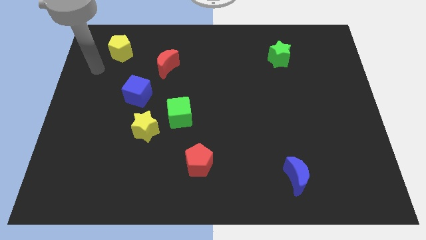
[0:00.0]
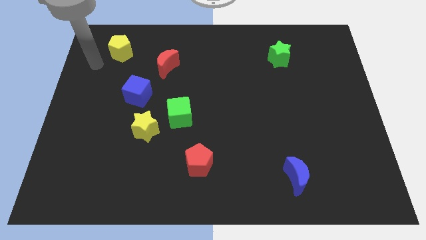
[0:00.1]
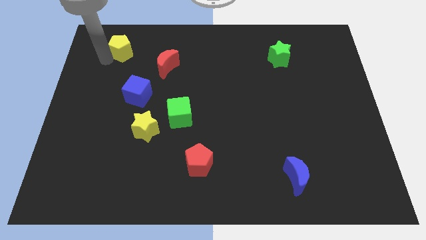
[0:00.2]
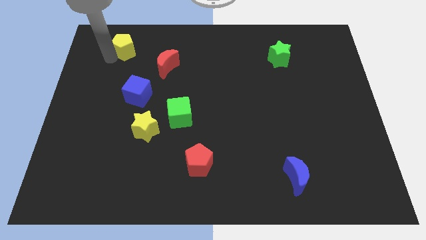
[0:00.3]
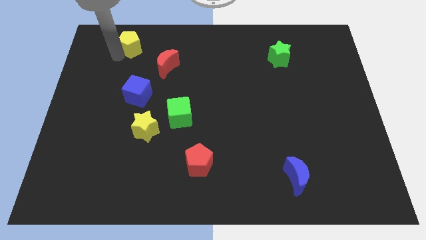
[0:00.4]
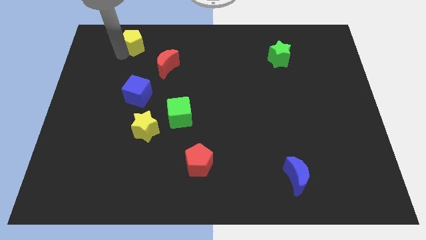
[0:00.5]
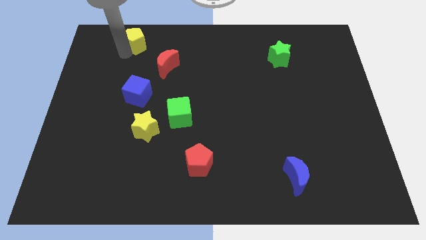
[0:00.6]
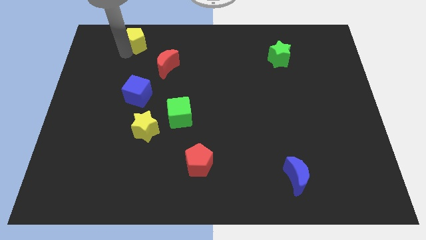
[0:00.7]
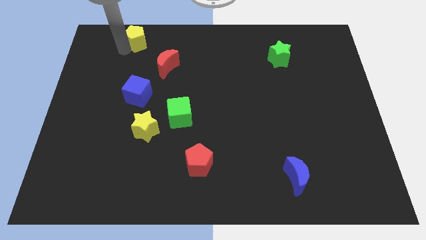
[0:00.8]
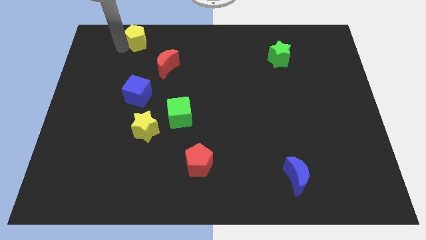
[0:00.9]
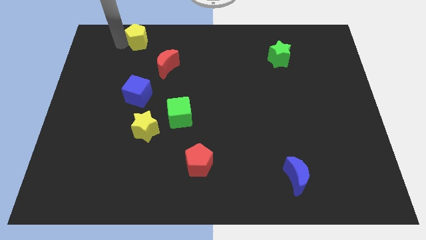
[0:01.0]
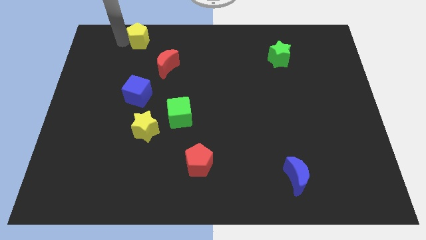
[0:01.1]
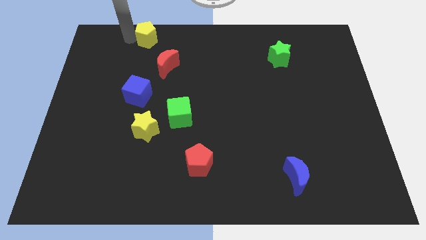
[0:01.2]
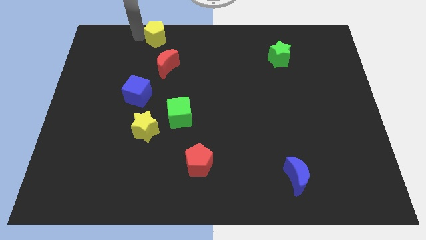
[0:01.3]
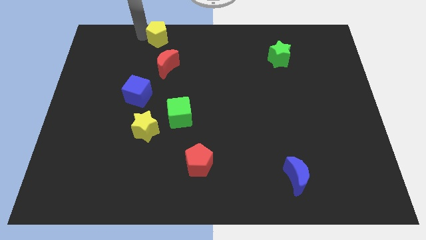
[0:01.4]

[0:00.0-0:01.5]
place yellow pentagon above blue cube

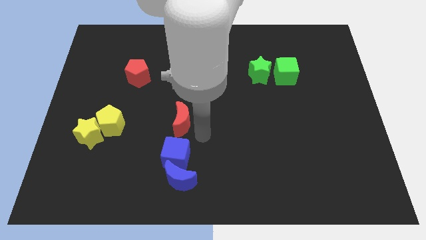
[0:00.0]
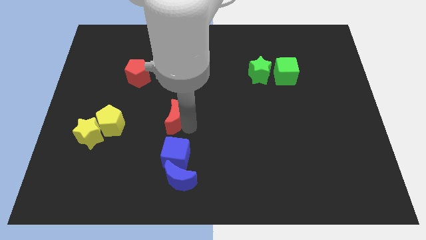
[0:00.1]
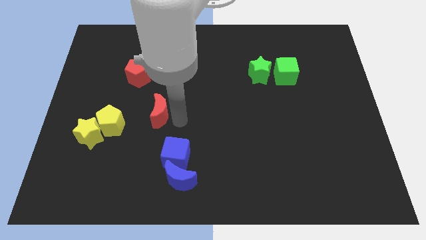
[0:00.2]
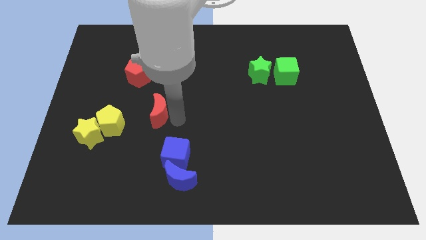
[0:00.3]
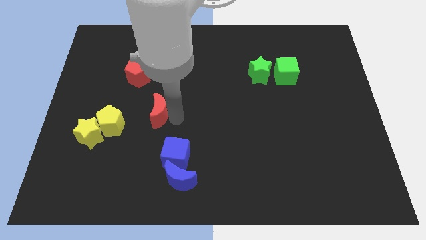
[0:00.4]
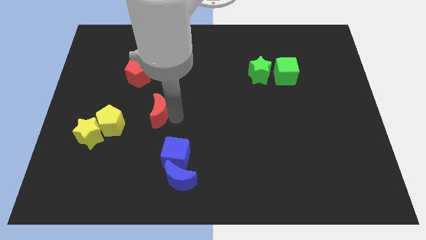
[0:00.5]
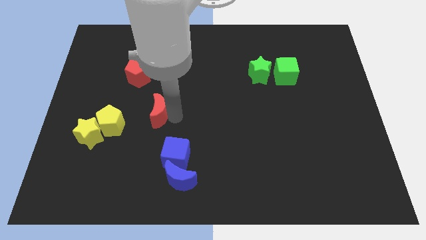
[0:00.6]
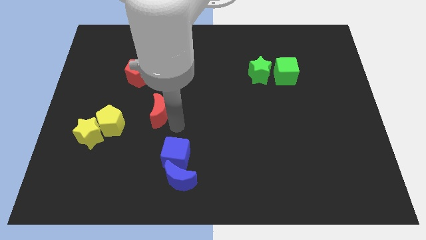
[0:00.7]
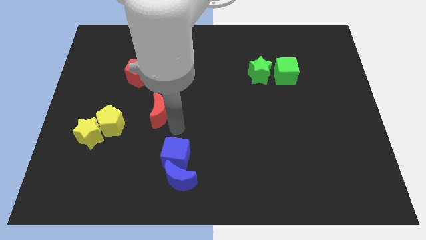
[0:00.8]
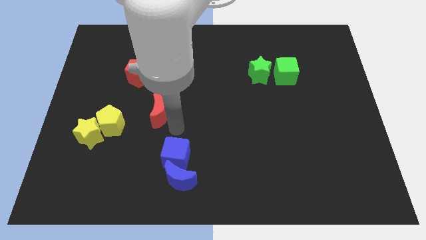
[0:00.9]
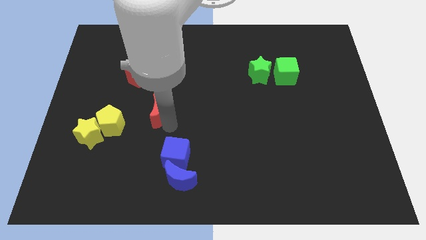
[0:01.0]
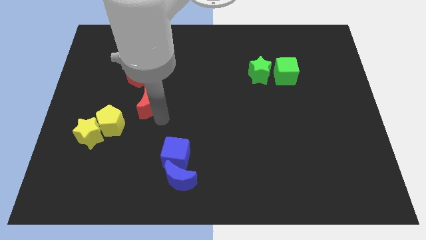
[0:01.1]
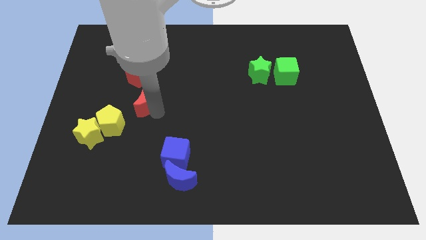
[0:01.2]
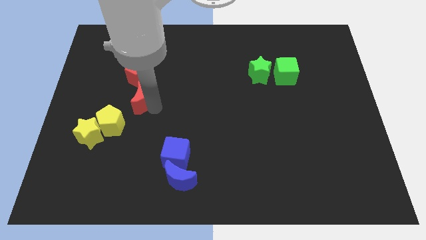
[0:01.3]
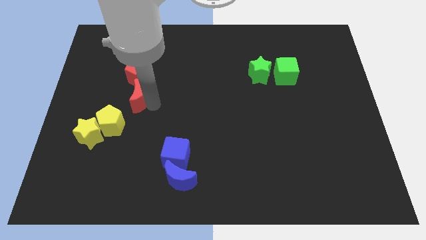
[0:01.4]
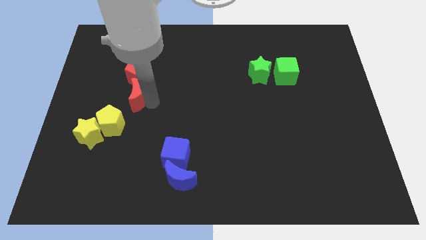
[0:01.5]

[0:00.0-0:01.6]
place red moon to the bottom of red pentagon

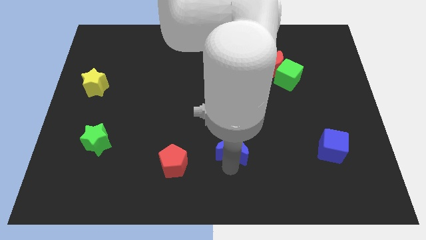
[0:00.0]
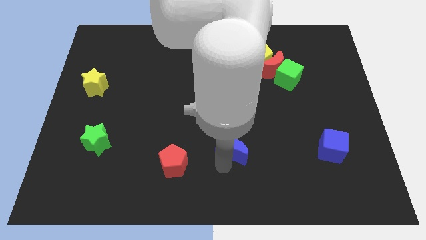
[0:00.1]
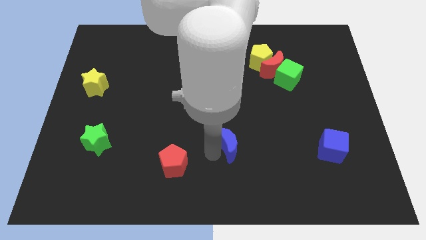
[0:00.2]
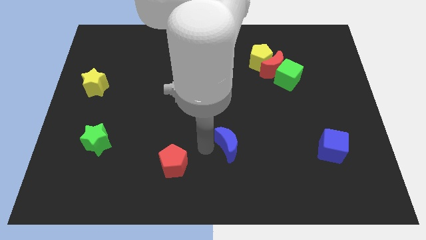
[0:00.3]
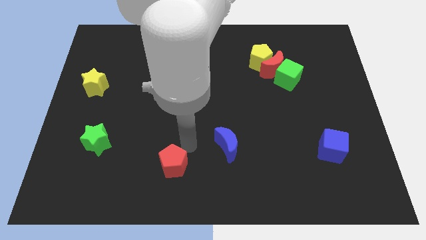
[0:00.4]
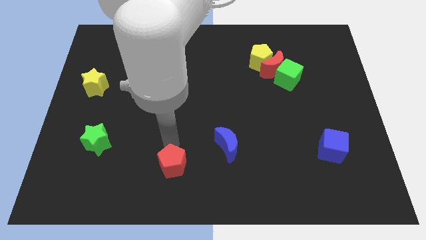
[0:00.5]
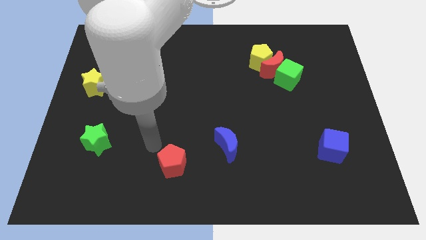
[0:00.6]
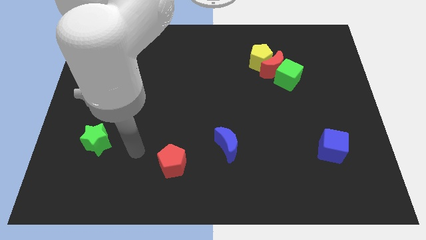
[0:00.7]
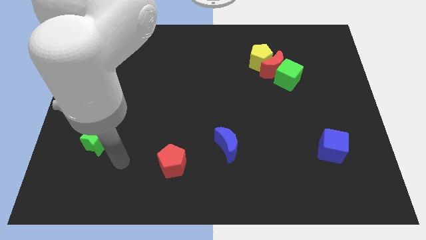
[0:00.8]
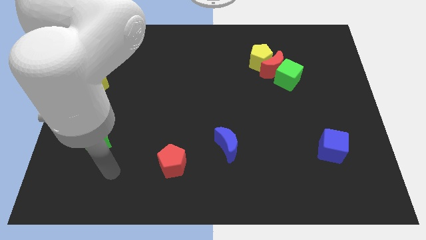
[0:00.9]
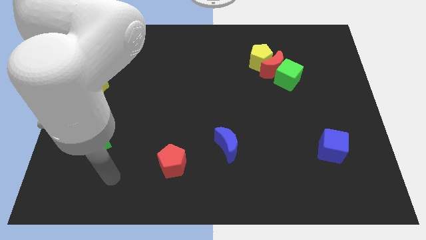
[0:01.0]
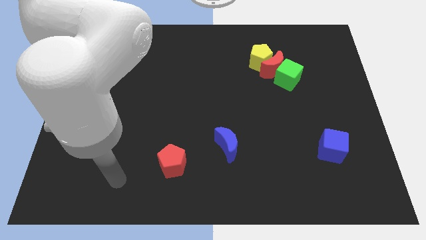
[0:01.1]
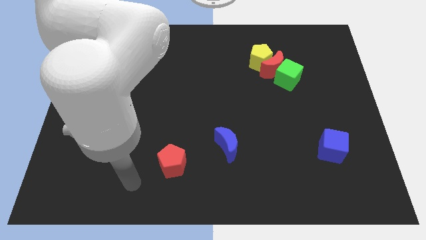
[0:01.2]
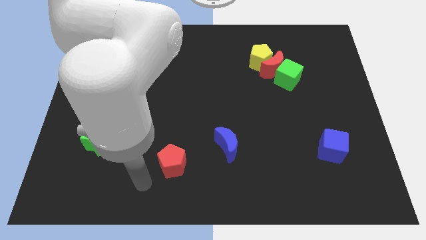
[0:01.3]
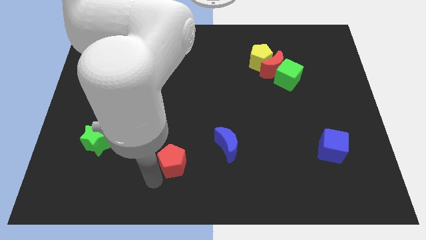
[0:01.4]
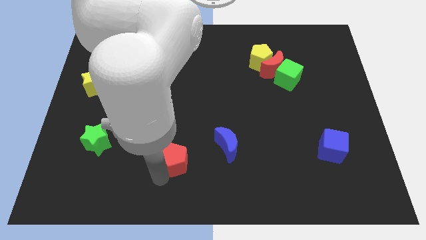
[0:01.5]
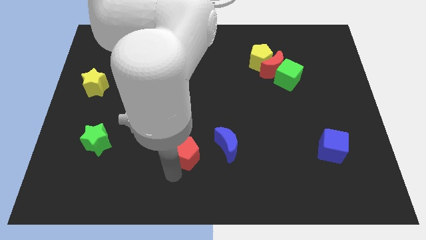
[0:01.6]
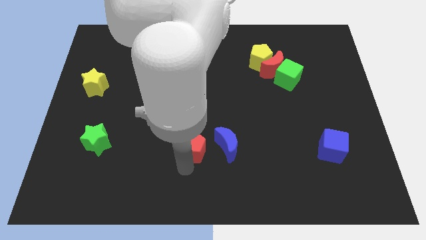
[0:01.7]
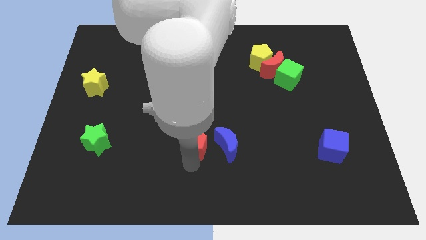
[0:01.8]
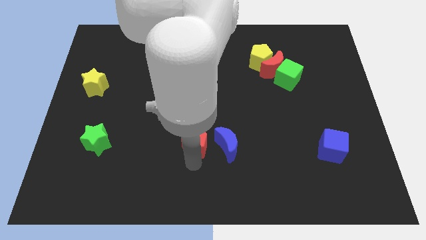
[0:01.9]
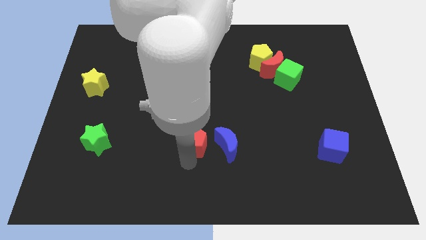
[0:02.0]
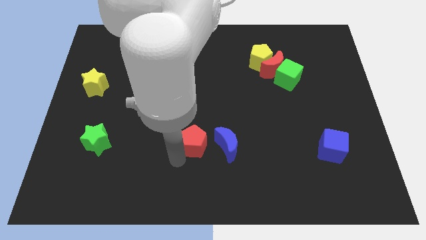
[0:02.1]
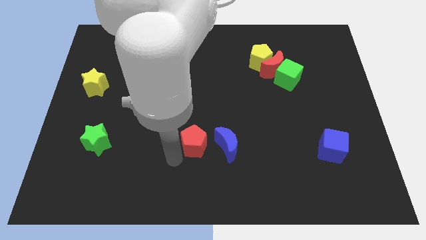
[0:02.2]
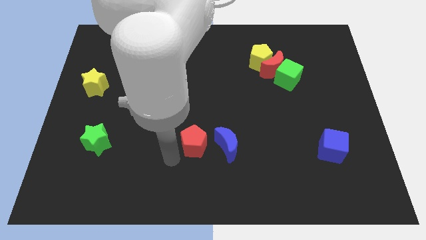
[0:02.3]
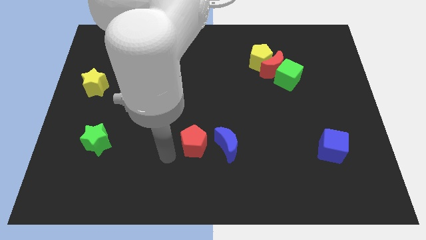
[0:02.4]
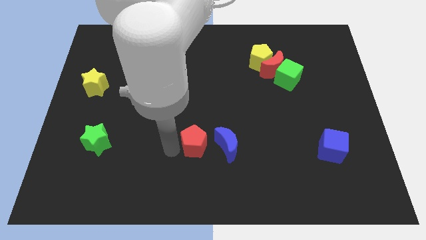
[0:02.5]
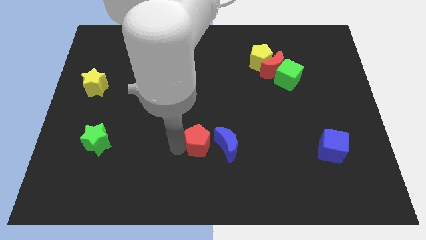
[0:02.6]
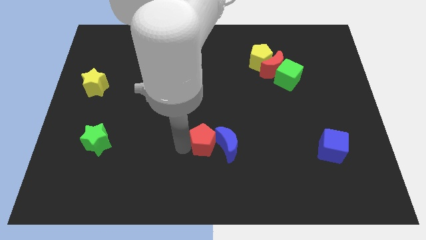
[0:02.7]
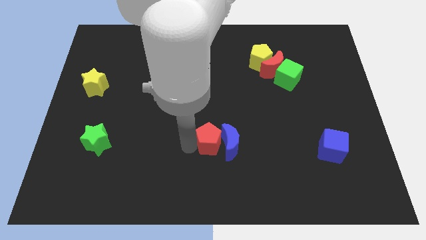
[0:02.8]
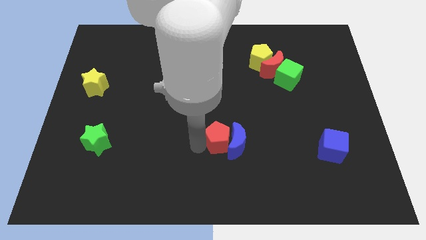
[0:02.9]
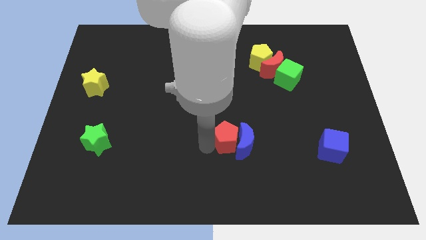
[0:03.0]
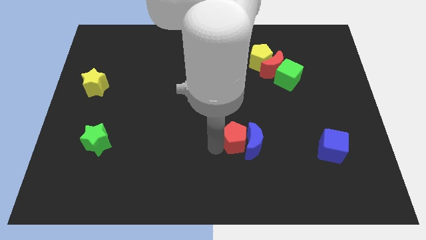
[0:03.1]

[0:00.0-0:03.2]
move the red pentagon into the blue moon

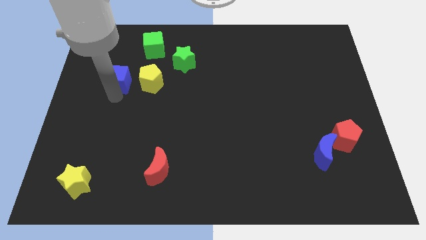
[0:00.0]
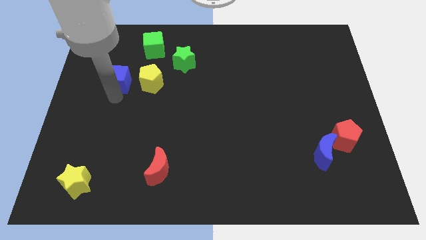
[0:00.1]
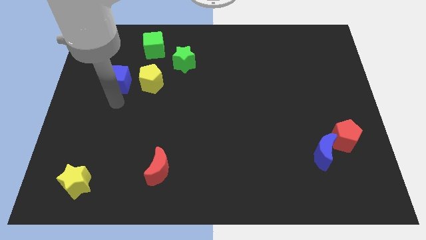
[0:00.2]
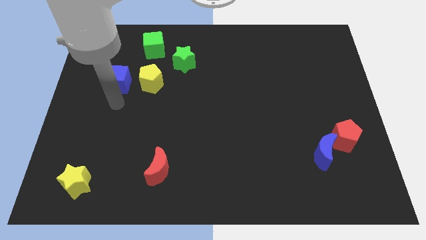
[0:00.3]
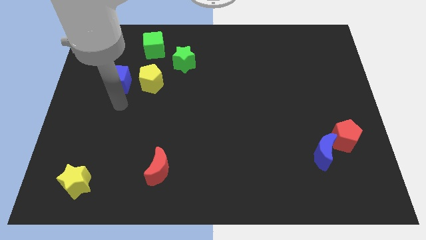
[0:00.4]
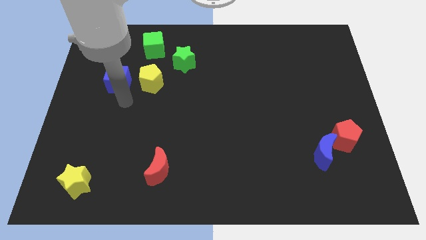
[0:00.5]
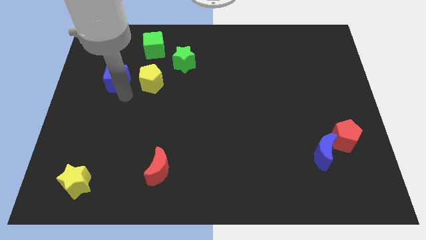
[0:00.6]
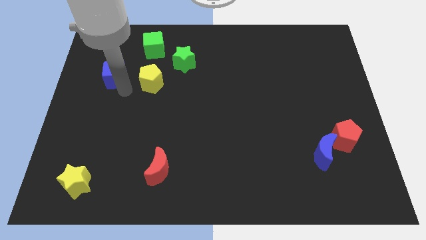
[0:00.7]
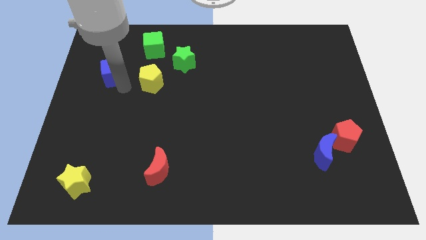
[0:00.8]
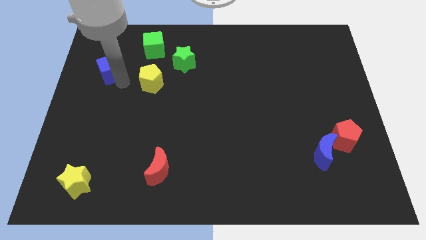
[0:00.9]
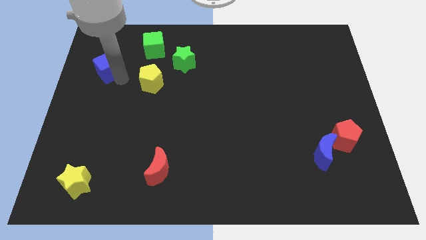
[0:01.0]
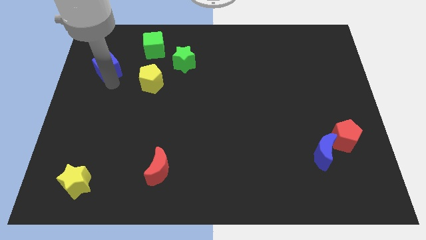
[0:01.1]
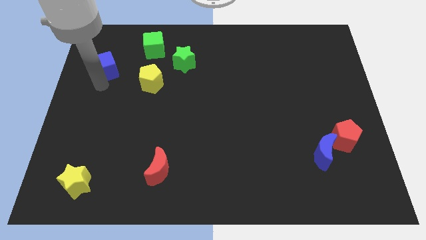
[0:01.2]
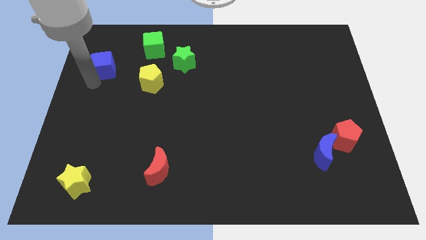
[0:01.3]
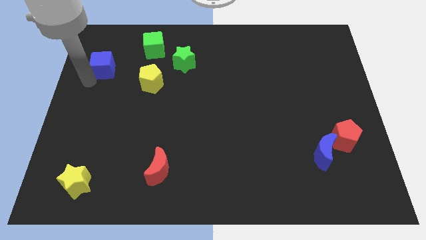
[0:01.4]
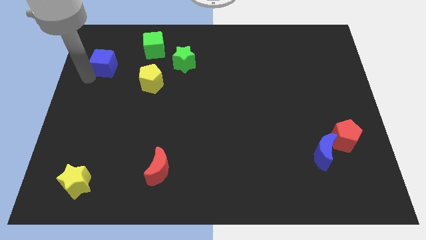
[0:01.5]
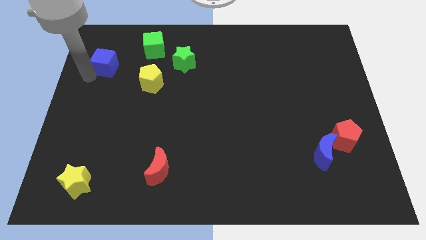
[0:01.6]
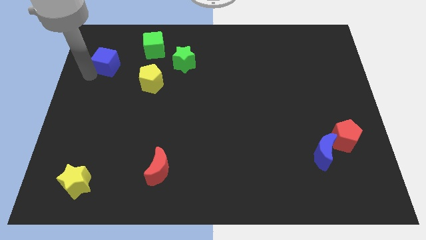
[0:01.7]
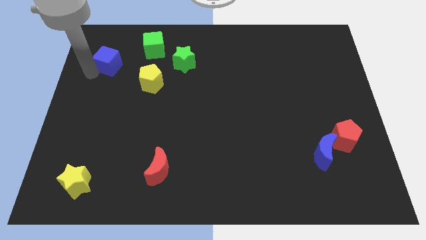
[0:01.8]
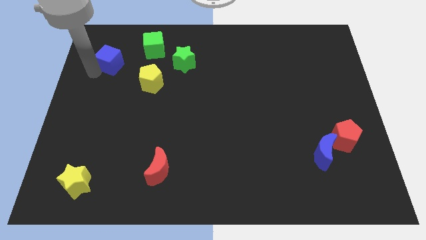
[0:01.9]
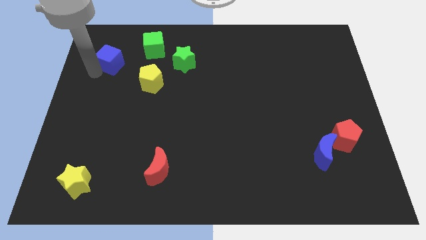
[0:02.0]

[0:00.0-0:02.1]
place blue cube diagonal left to the yellow pentagon

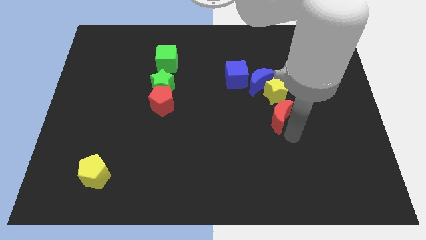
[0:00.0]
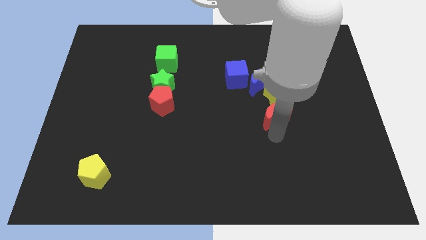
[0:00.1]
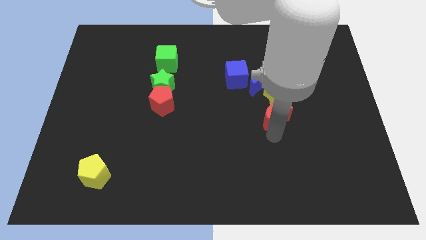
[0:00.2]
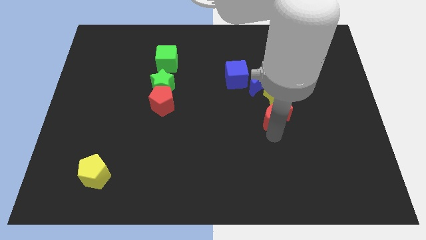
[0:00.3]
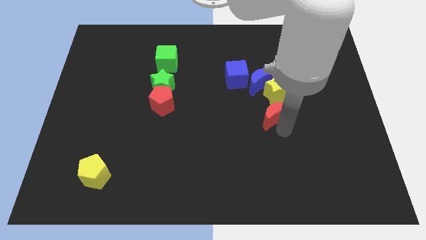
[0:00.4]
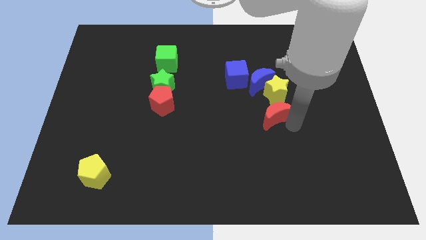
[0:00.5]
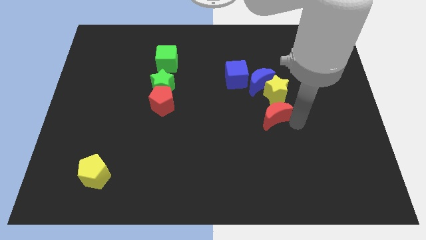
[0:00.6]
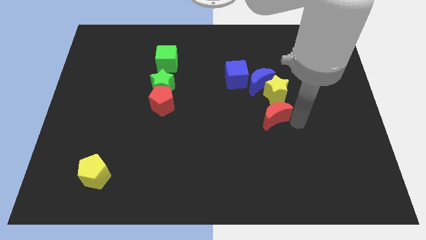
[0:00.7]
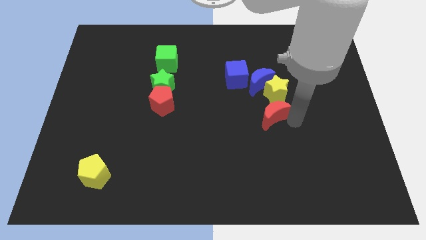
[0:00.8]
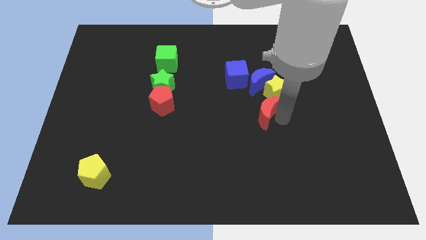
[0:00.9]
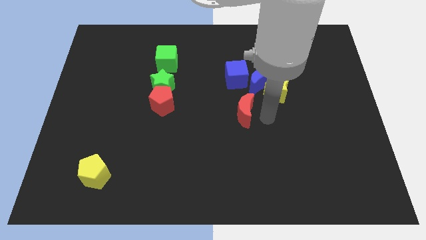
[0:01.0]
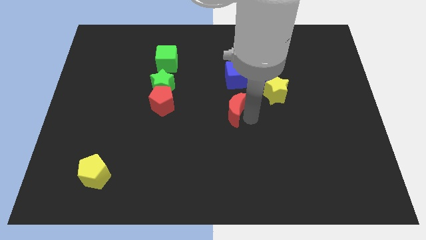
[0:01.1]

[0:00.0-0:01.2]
put red crescent below blue cube
